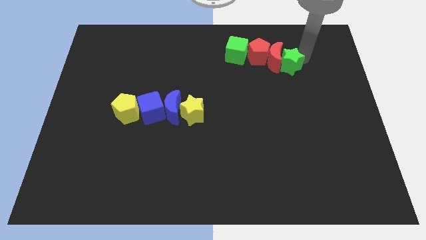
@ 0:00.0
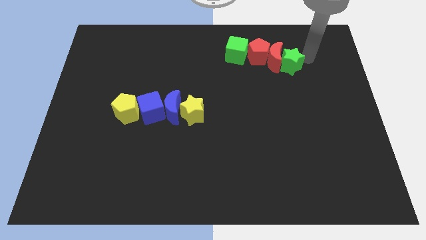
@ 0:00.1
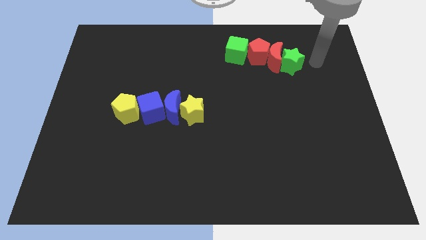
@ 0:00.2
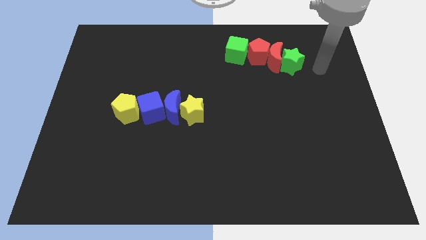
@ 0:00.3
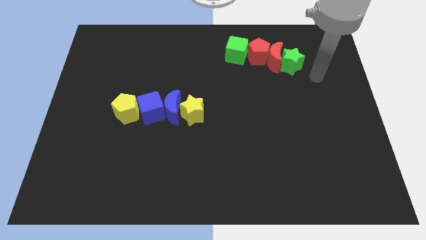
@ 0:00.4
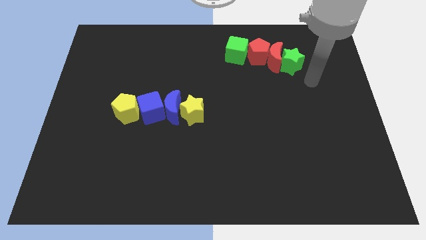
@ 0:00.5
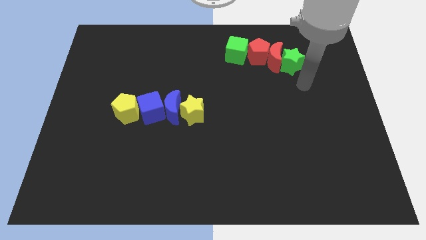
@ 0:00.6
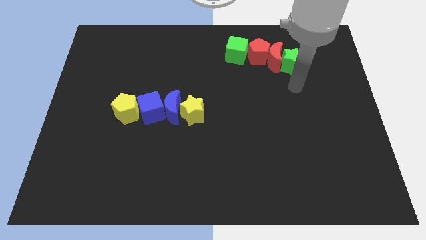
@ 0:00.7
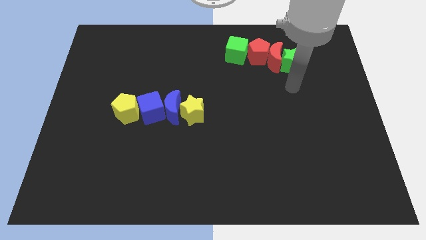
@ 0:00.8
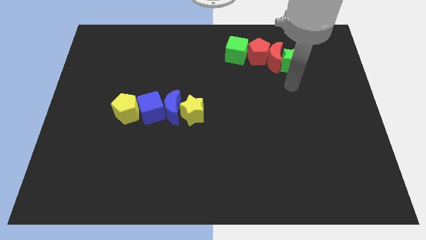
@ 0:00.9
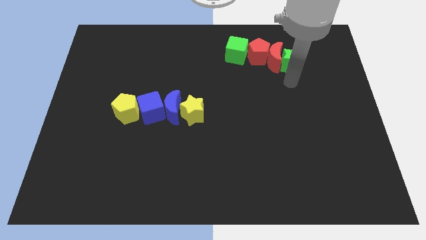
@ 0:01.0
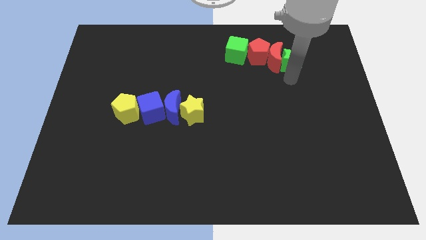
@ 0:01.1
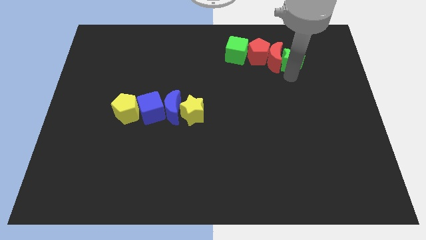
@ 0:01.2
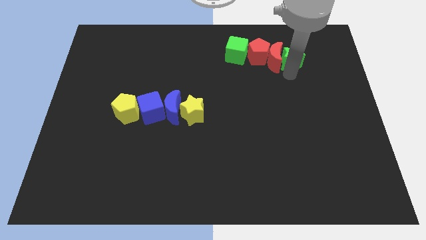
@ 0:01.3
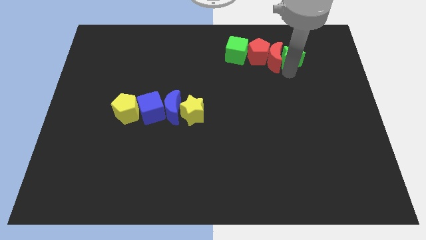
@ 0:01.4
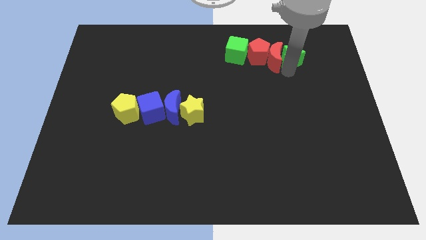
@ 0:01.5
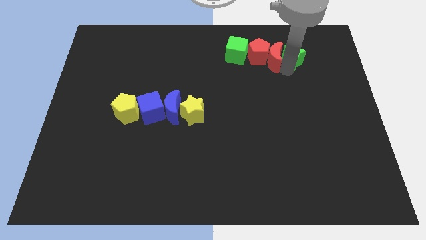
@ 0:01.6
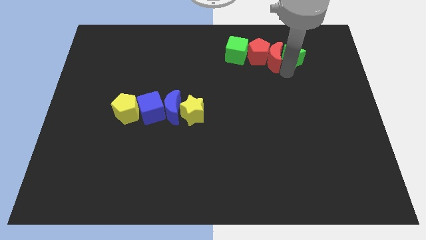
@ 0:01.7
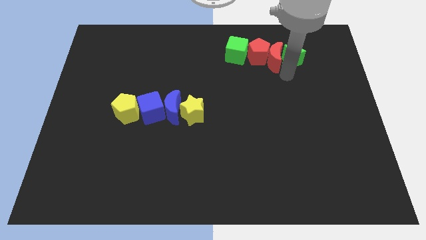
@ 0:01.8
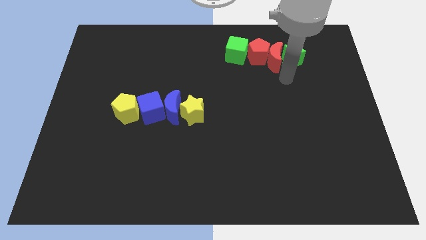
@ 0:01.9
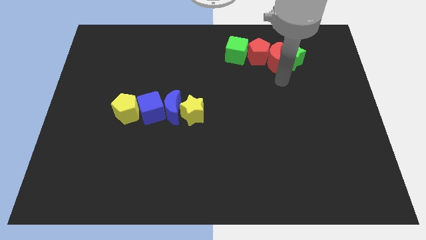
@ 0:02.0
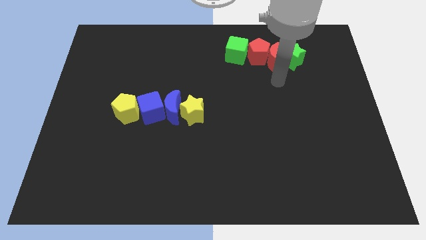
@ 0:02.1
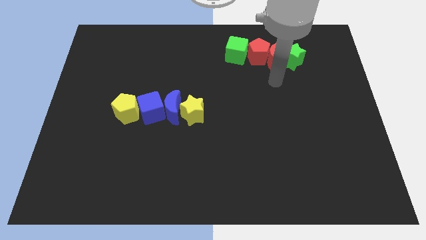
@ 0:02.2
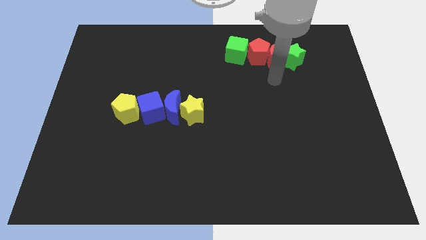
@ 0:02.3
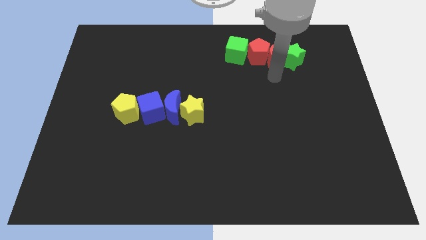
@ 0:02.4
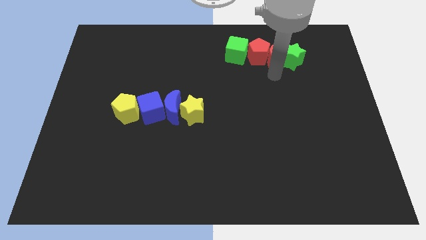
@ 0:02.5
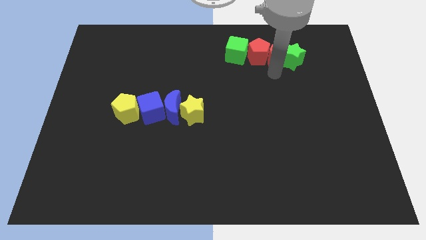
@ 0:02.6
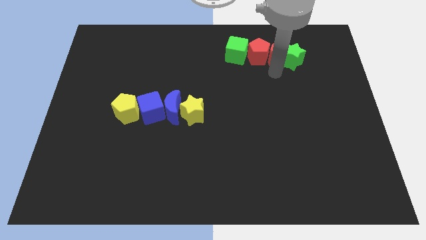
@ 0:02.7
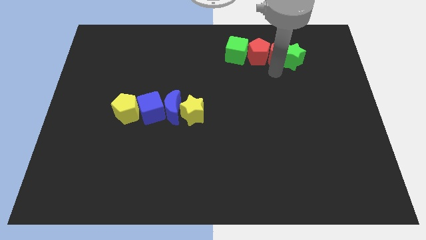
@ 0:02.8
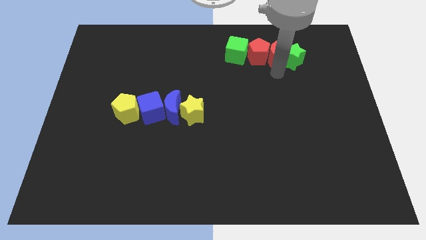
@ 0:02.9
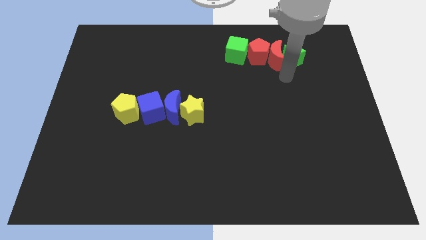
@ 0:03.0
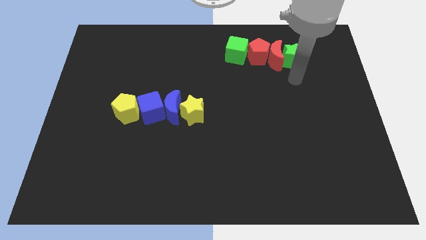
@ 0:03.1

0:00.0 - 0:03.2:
adjust the green star and red crescent at the right side of the red pentagon

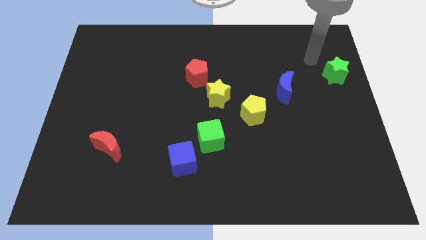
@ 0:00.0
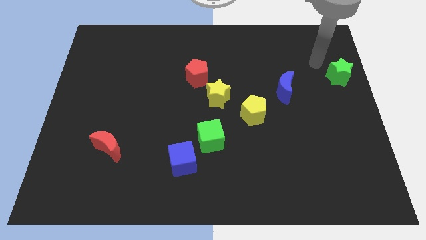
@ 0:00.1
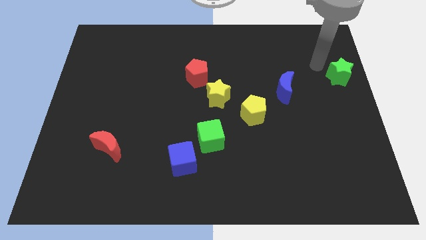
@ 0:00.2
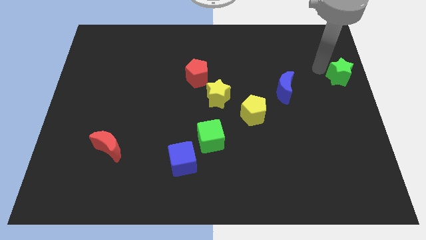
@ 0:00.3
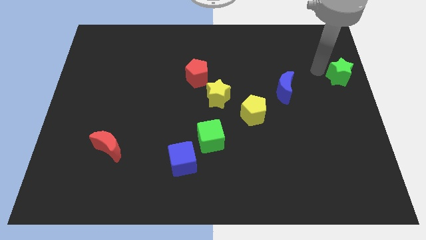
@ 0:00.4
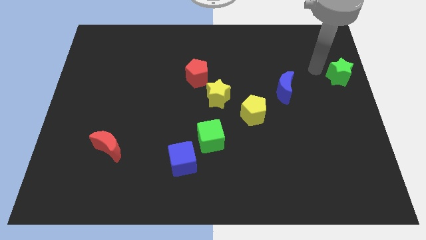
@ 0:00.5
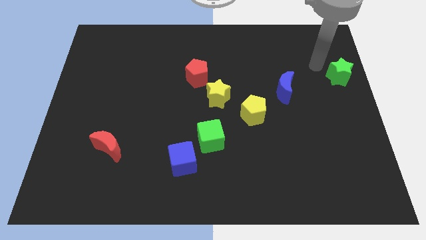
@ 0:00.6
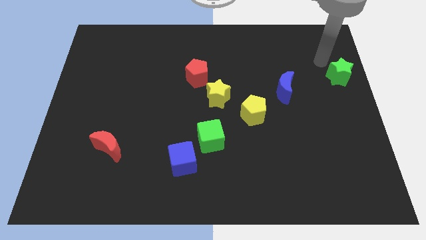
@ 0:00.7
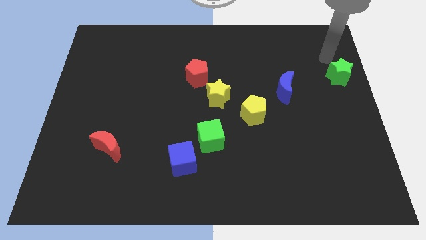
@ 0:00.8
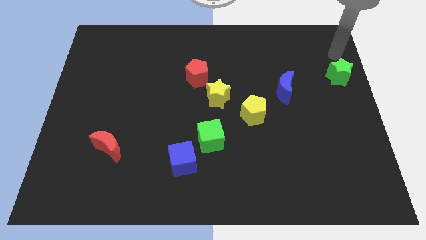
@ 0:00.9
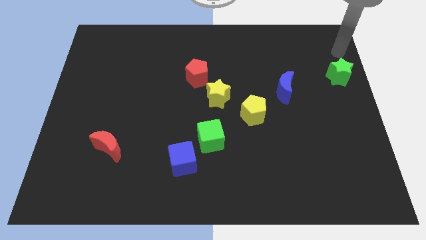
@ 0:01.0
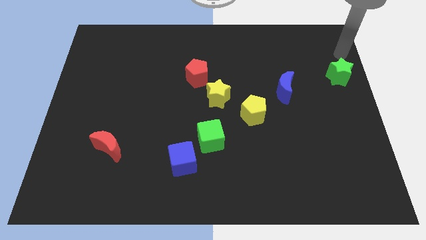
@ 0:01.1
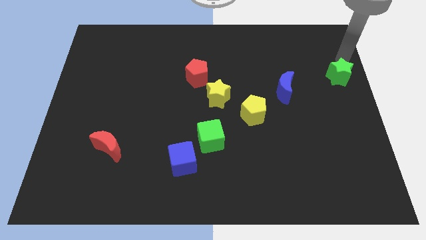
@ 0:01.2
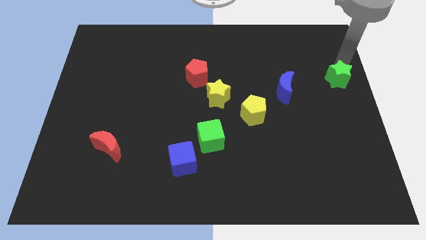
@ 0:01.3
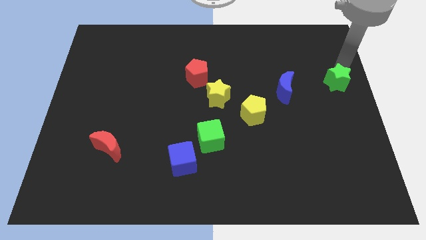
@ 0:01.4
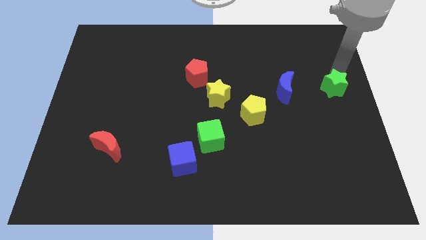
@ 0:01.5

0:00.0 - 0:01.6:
move the green star parallel to the right of the blue moon

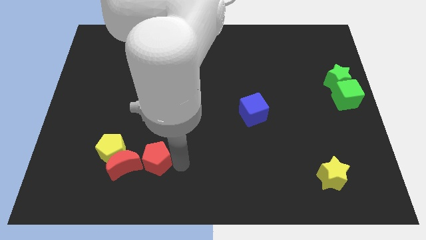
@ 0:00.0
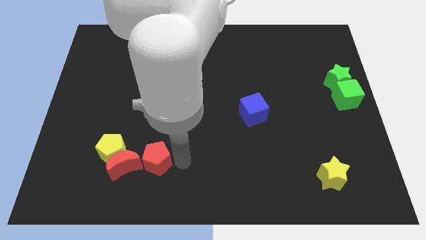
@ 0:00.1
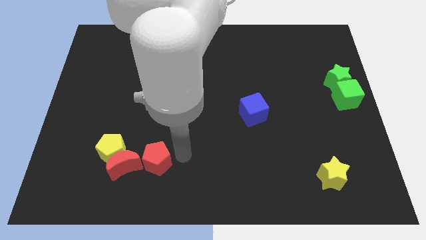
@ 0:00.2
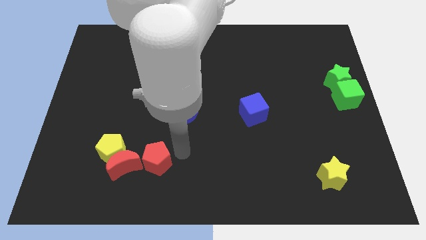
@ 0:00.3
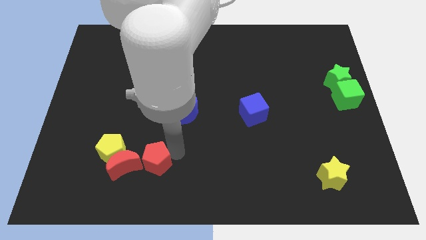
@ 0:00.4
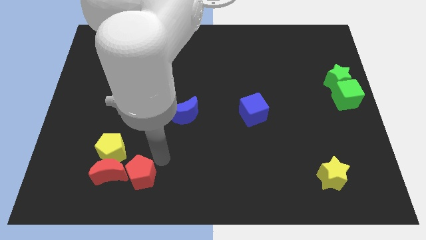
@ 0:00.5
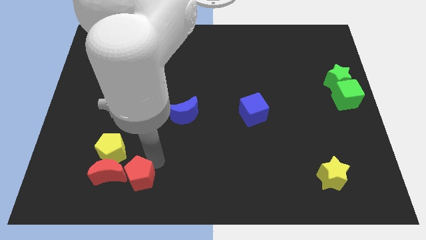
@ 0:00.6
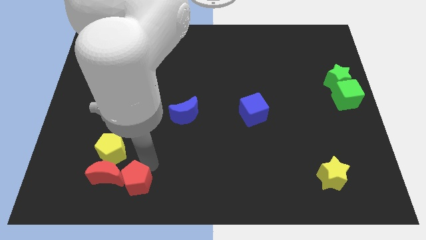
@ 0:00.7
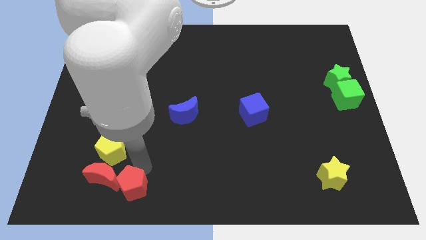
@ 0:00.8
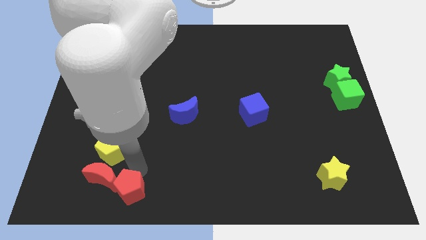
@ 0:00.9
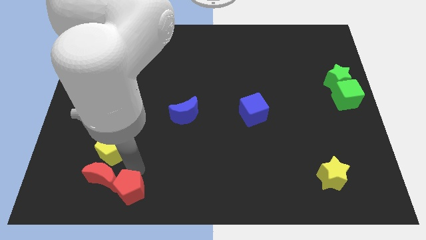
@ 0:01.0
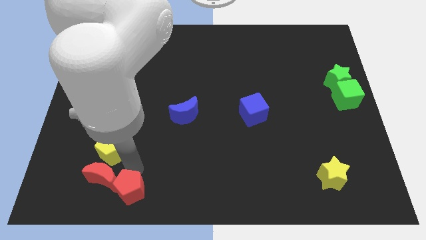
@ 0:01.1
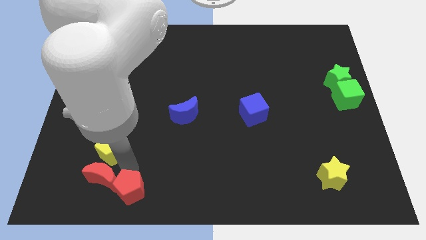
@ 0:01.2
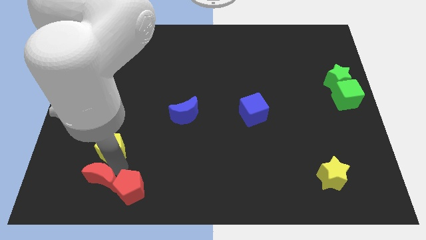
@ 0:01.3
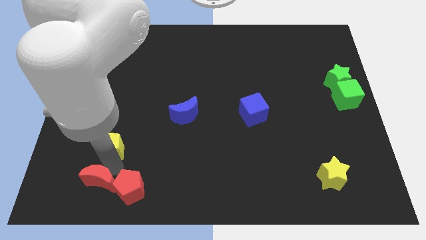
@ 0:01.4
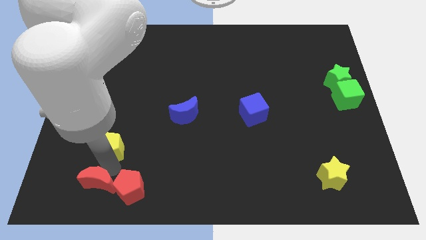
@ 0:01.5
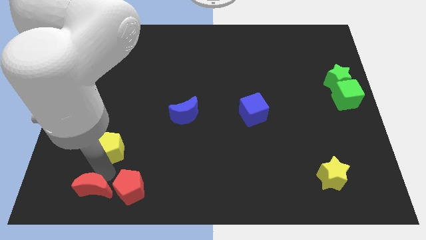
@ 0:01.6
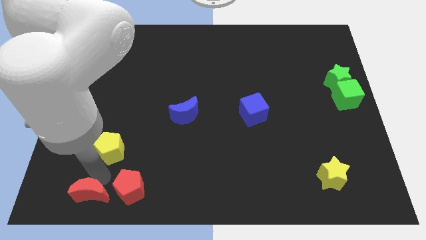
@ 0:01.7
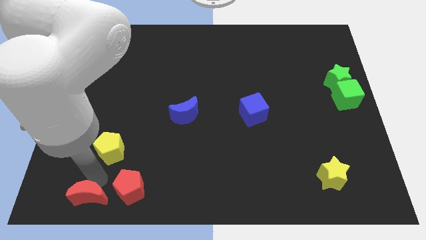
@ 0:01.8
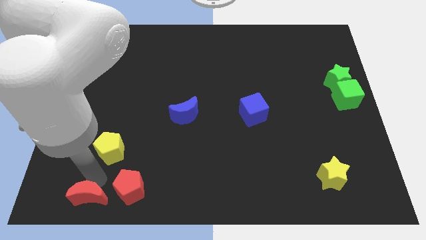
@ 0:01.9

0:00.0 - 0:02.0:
make a triangle out of red blocks and the yellow pentagon

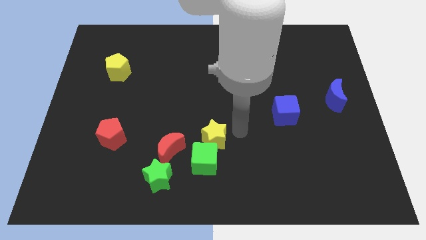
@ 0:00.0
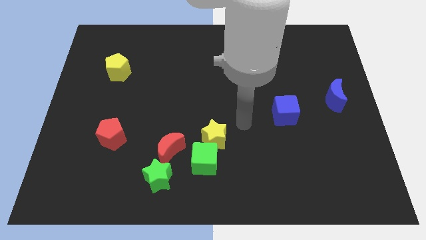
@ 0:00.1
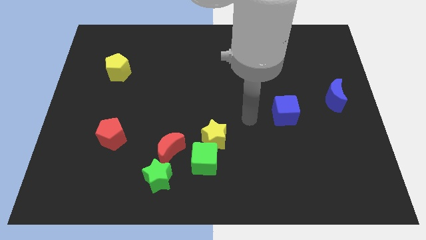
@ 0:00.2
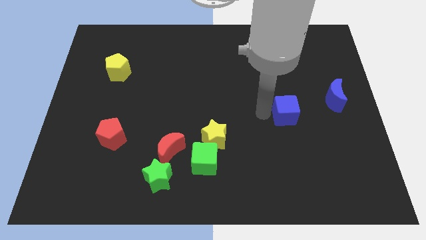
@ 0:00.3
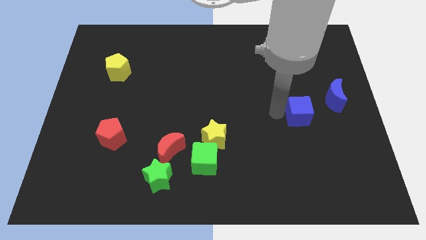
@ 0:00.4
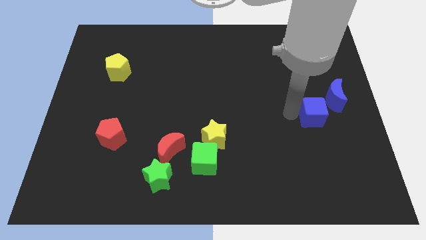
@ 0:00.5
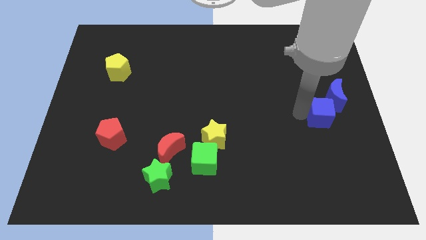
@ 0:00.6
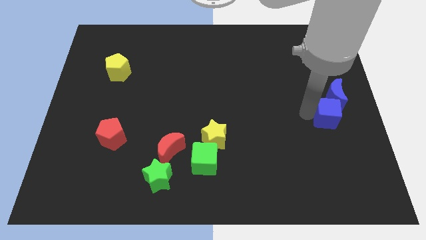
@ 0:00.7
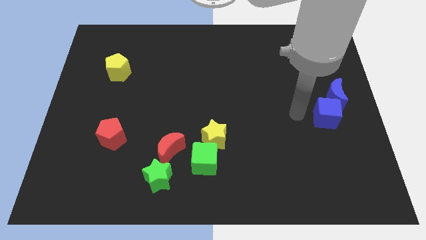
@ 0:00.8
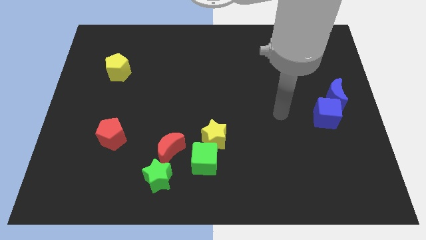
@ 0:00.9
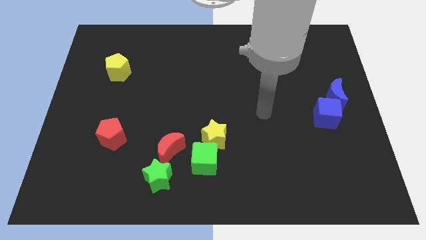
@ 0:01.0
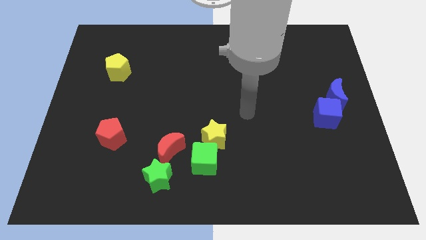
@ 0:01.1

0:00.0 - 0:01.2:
move the blue cube below to the blue crescent

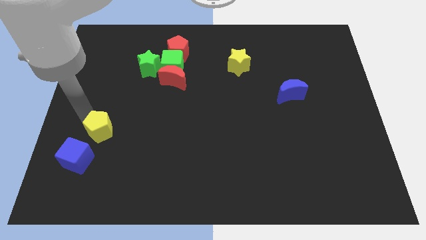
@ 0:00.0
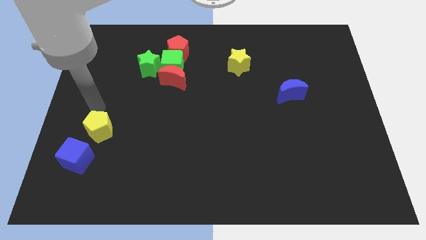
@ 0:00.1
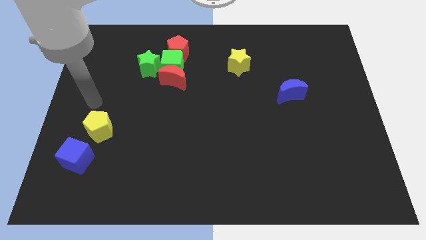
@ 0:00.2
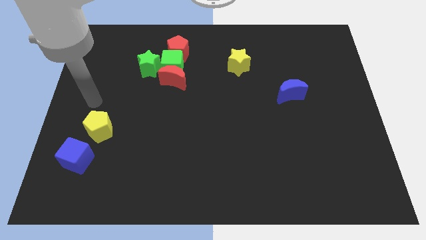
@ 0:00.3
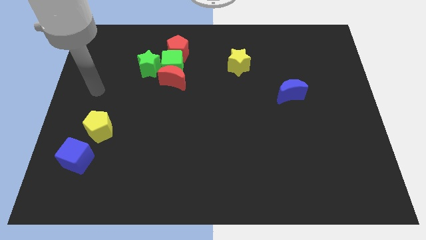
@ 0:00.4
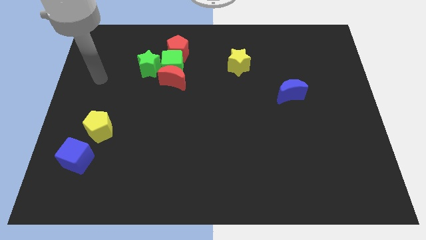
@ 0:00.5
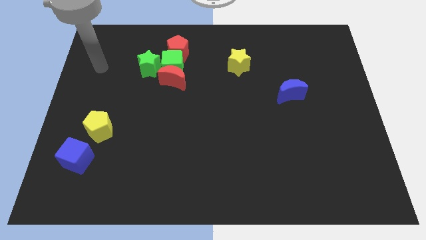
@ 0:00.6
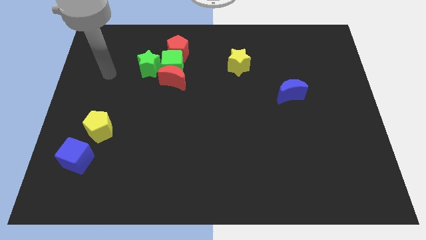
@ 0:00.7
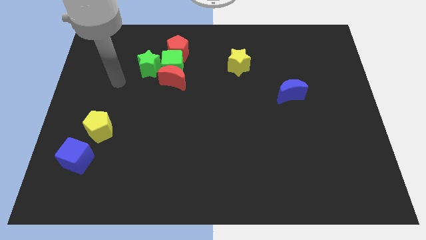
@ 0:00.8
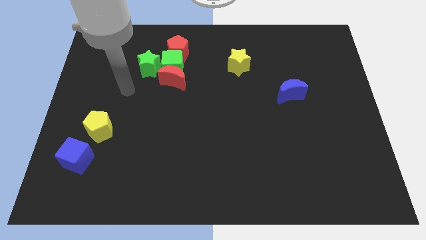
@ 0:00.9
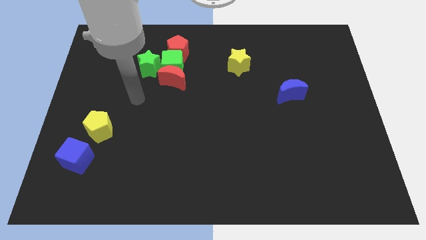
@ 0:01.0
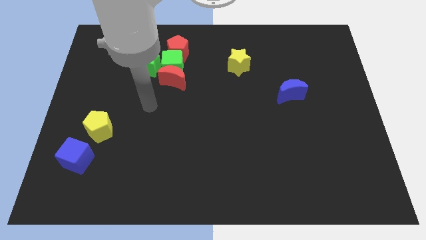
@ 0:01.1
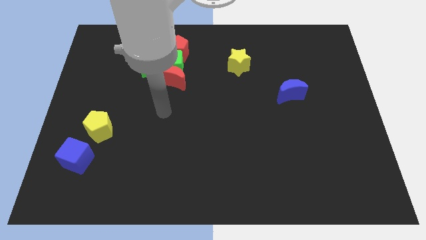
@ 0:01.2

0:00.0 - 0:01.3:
go away from the yellow pentagon
